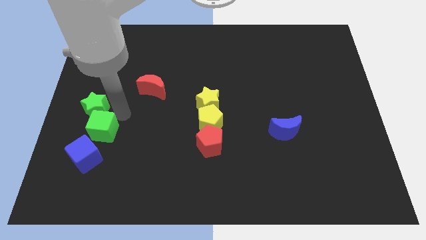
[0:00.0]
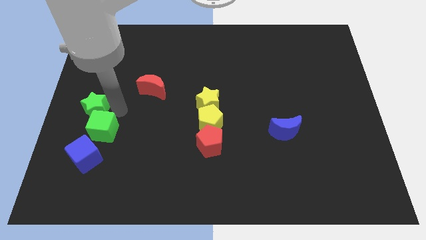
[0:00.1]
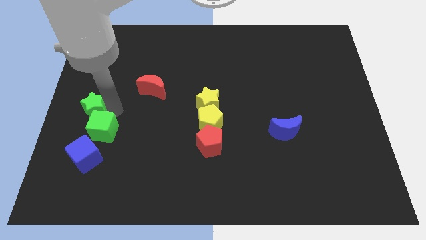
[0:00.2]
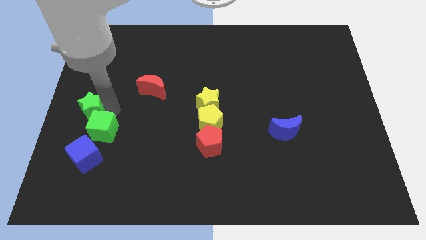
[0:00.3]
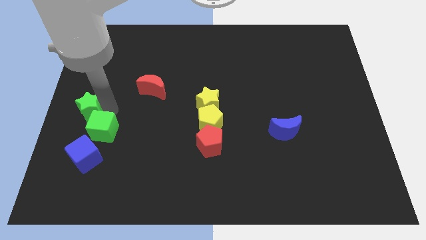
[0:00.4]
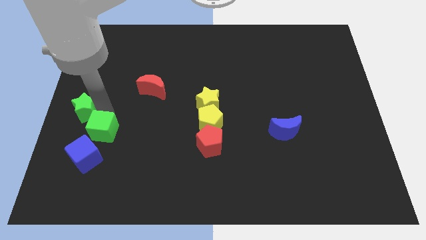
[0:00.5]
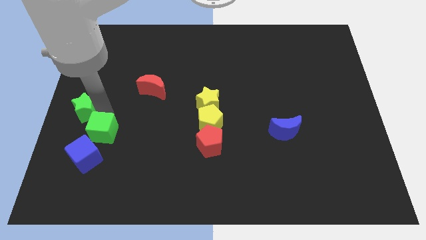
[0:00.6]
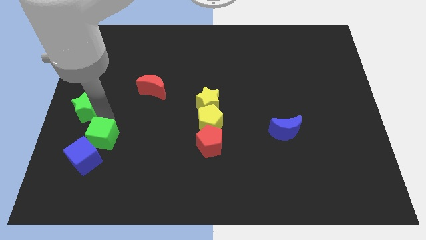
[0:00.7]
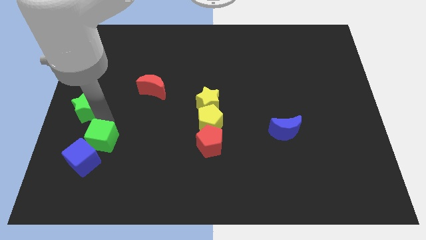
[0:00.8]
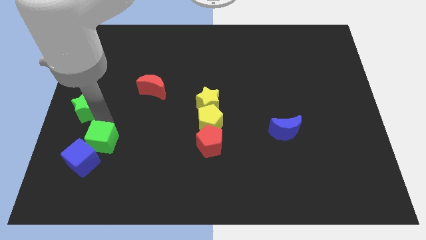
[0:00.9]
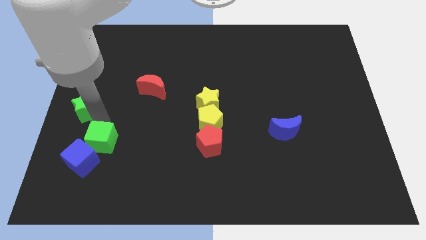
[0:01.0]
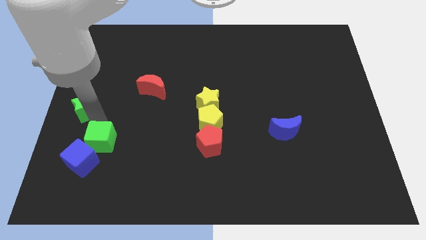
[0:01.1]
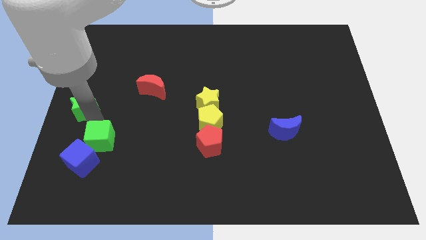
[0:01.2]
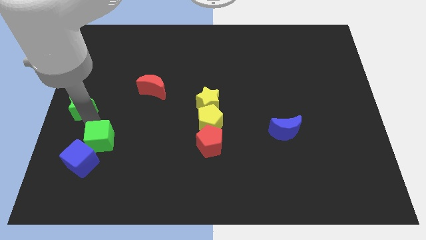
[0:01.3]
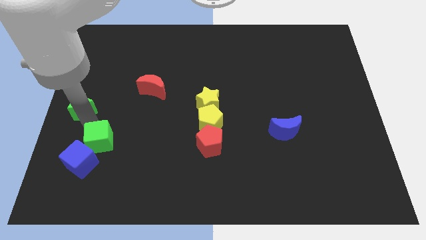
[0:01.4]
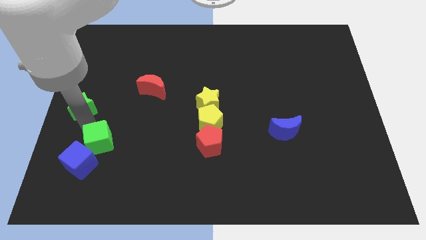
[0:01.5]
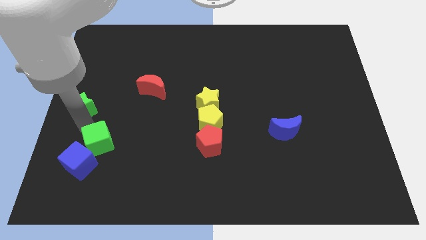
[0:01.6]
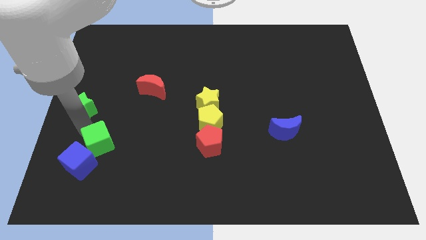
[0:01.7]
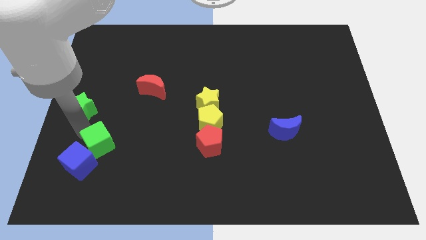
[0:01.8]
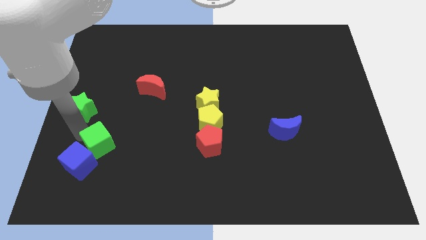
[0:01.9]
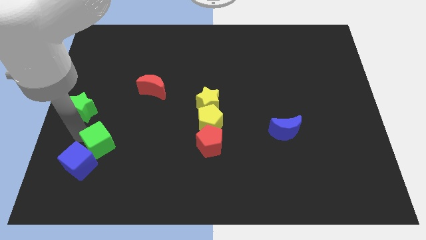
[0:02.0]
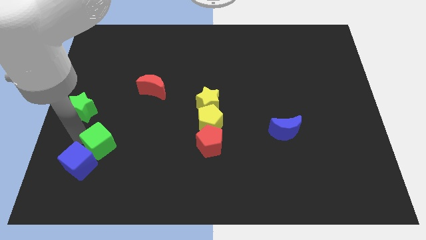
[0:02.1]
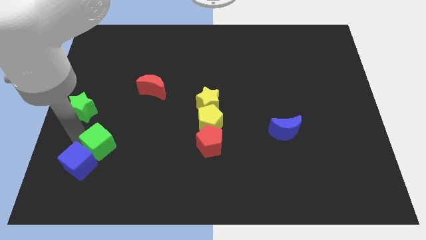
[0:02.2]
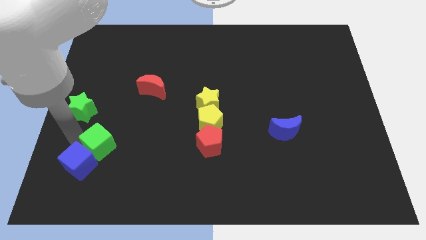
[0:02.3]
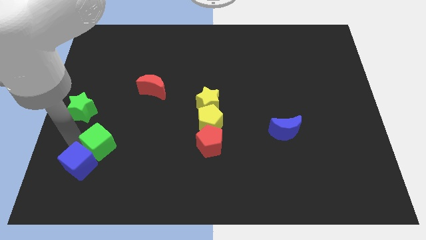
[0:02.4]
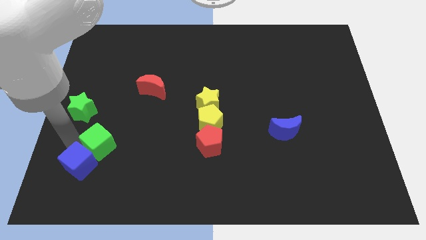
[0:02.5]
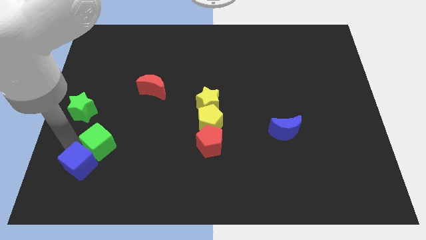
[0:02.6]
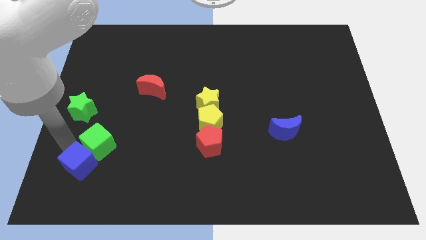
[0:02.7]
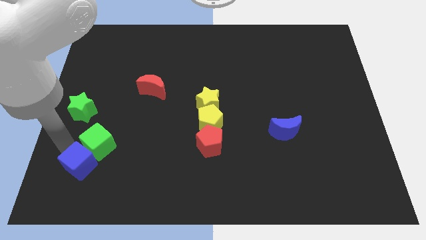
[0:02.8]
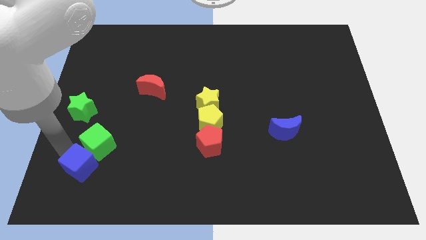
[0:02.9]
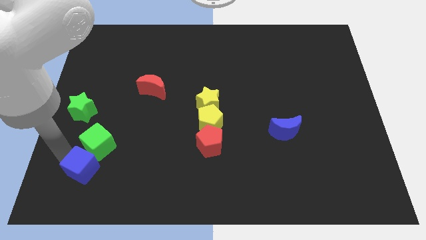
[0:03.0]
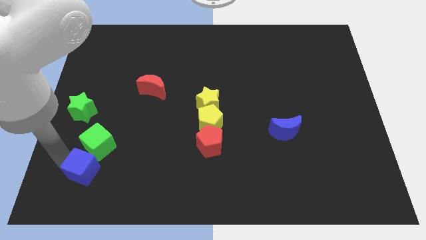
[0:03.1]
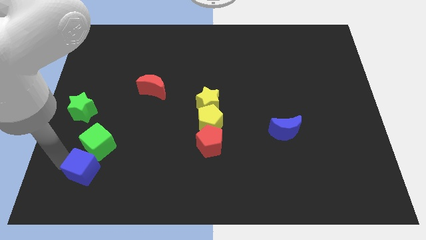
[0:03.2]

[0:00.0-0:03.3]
separate the green blocks

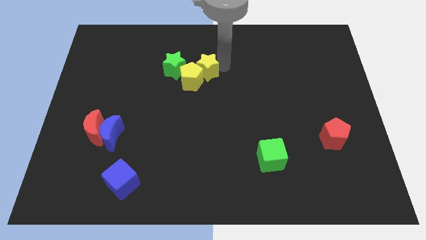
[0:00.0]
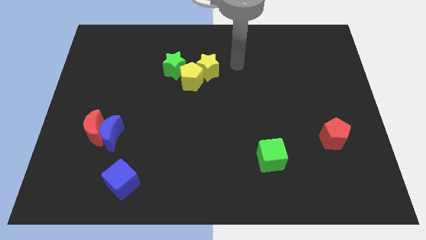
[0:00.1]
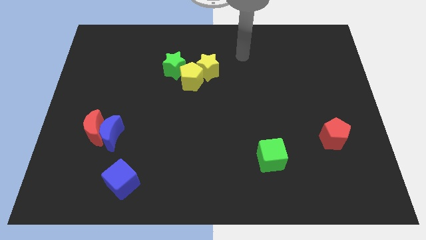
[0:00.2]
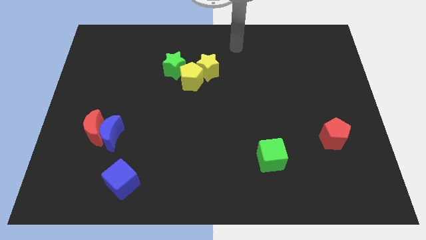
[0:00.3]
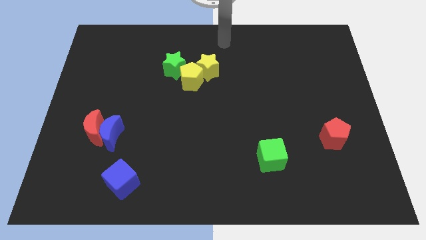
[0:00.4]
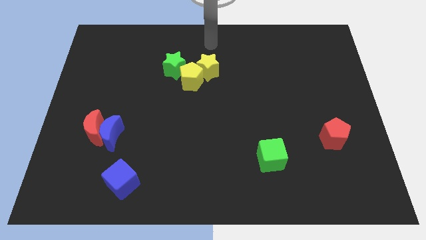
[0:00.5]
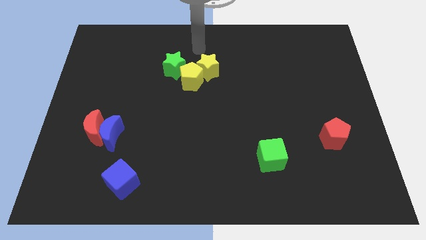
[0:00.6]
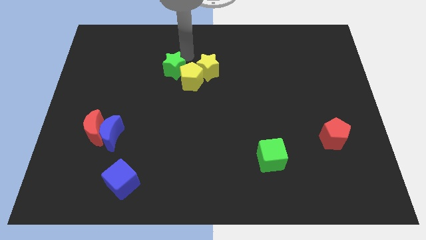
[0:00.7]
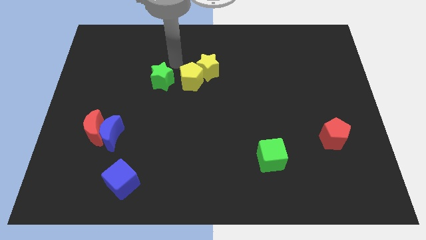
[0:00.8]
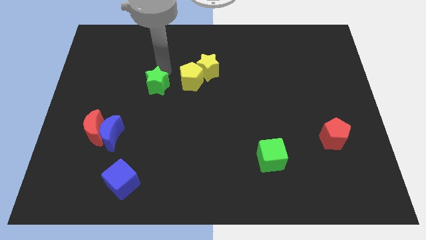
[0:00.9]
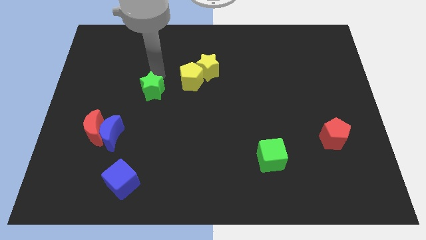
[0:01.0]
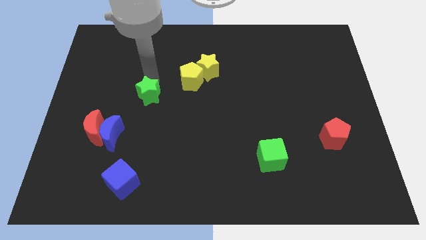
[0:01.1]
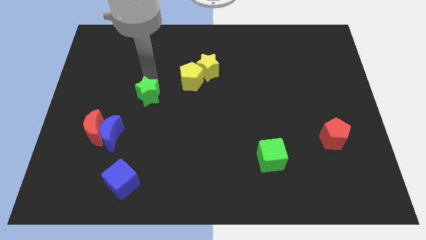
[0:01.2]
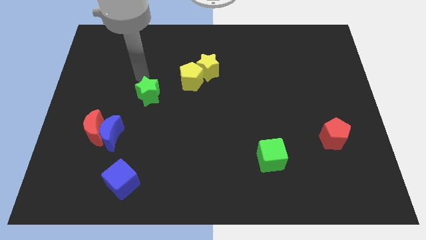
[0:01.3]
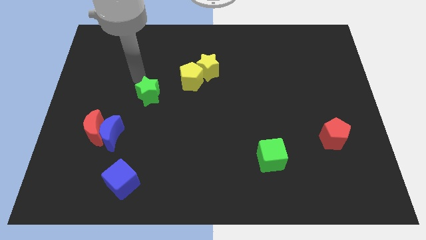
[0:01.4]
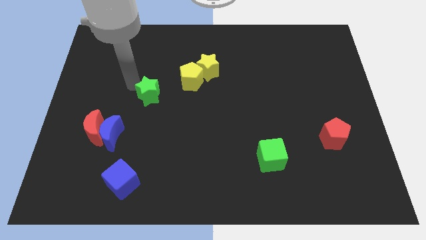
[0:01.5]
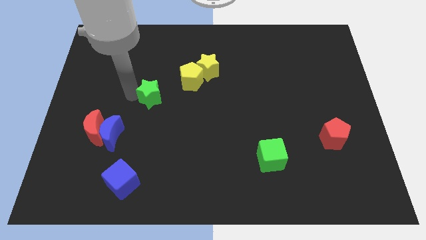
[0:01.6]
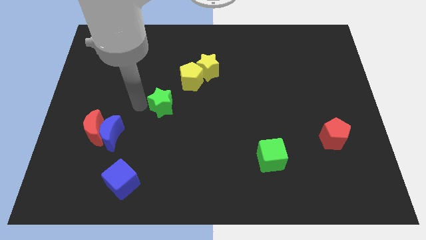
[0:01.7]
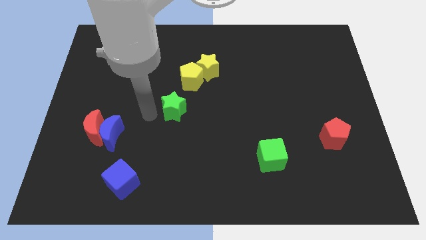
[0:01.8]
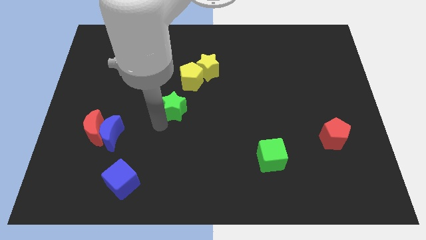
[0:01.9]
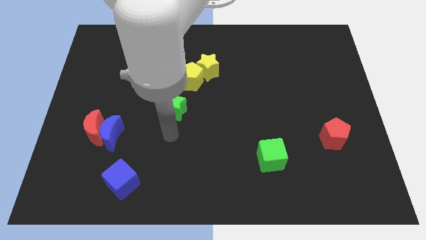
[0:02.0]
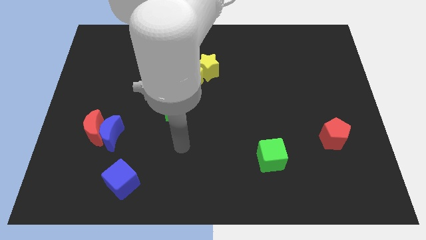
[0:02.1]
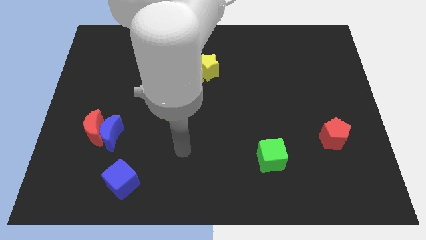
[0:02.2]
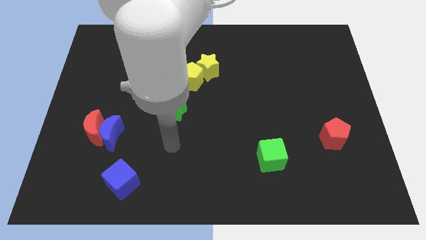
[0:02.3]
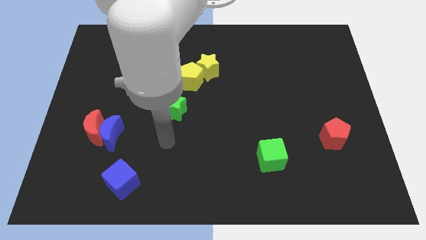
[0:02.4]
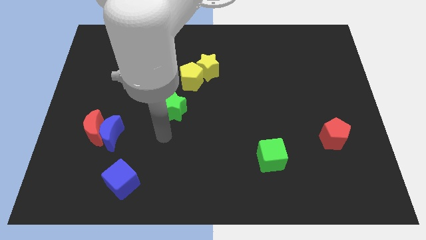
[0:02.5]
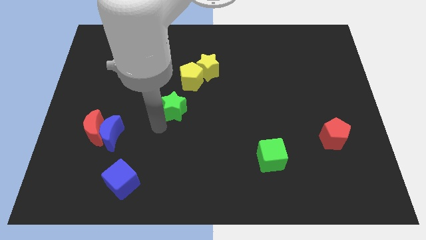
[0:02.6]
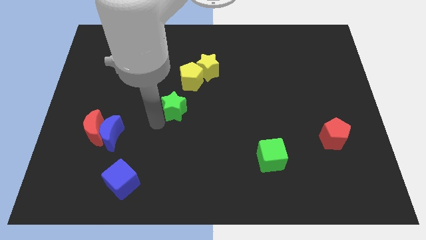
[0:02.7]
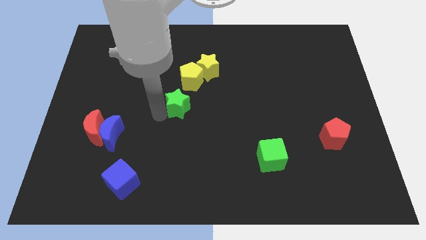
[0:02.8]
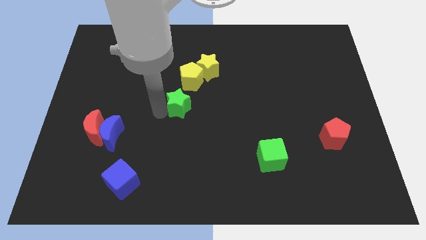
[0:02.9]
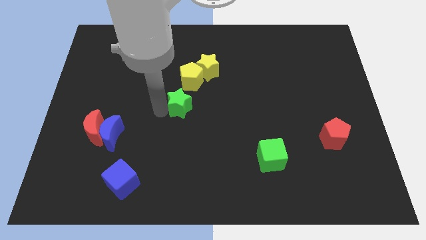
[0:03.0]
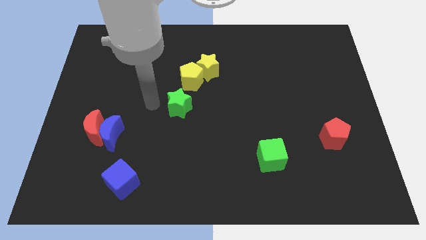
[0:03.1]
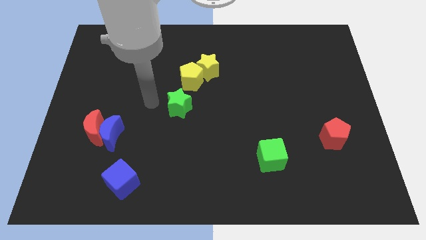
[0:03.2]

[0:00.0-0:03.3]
push the green star to the bottom side of the yellow pentagon

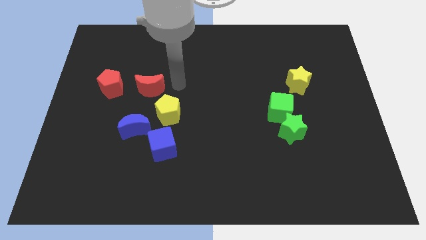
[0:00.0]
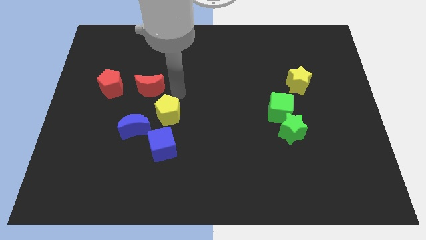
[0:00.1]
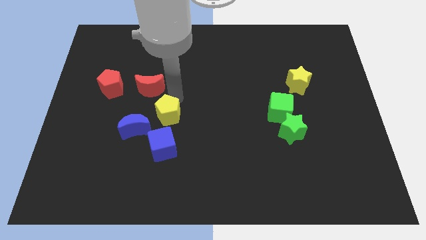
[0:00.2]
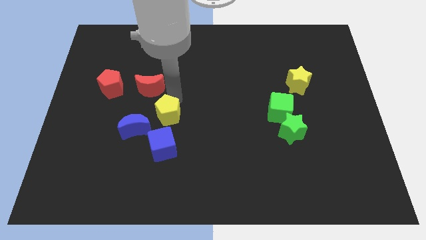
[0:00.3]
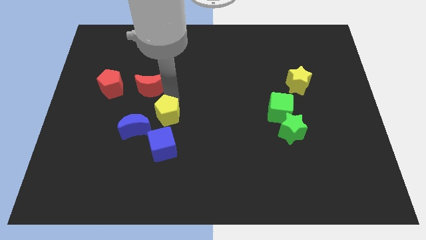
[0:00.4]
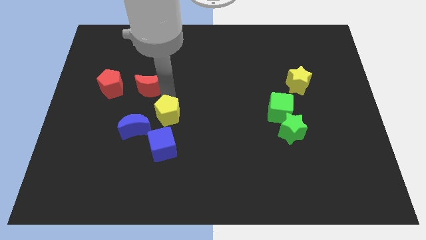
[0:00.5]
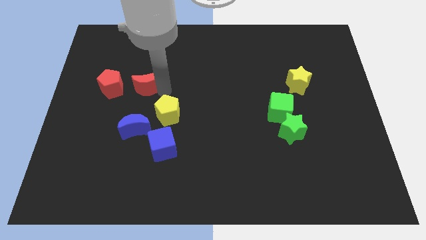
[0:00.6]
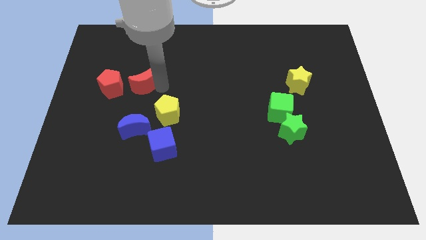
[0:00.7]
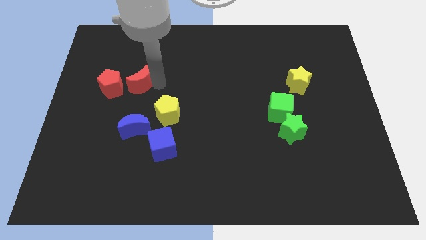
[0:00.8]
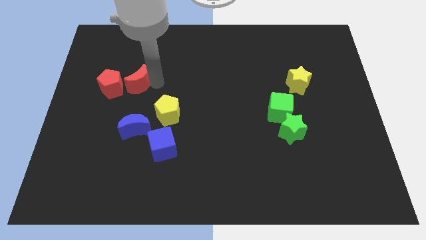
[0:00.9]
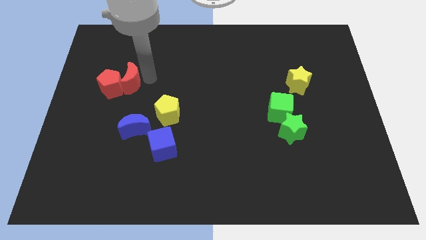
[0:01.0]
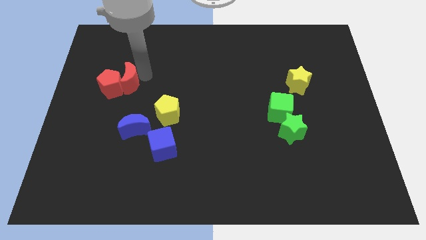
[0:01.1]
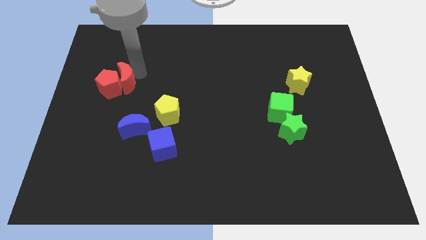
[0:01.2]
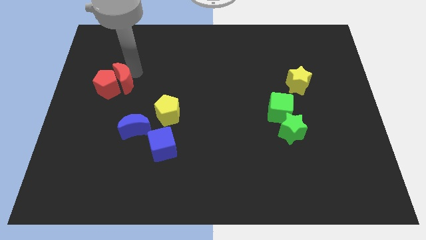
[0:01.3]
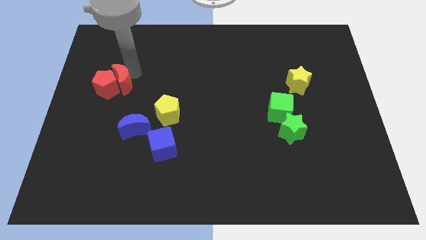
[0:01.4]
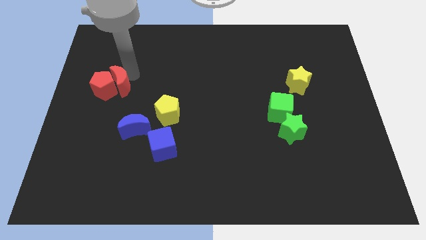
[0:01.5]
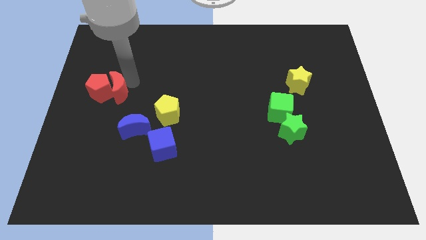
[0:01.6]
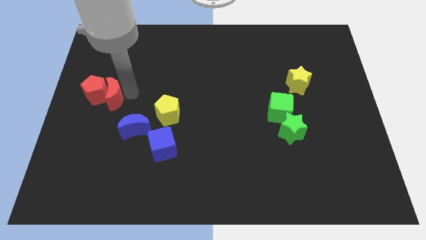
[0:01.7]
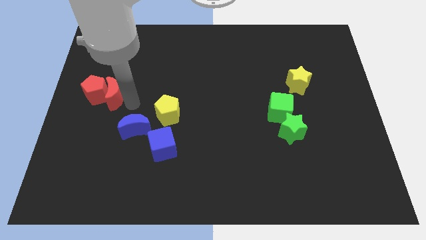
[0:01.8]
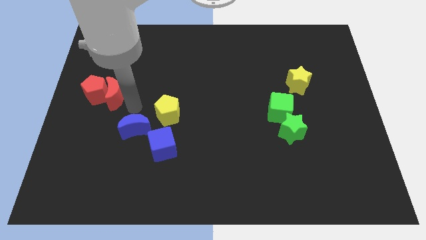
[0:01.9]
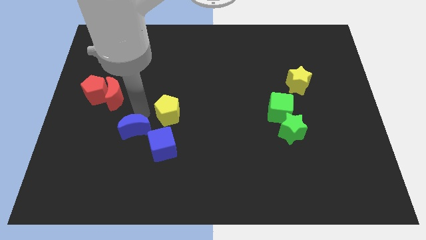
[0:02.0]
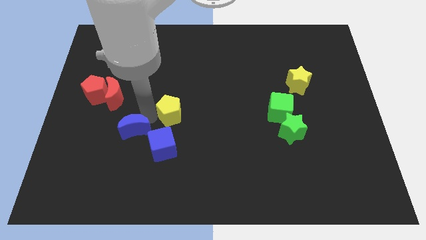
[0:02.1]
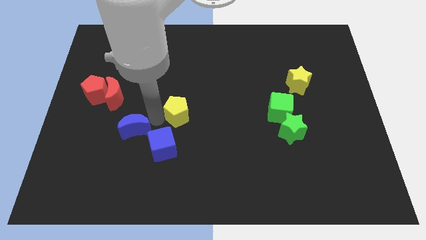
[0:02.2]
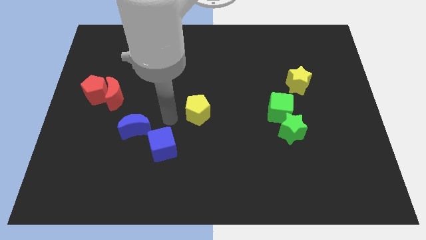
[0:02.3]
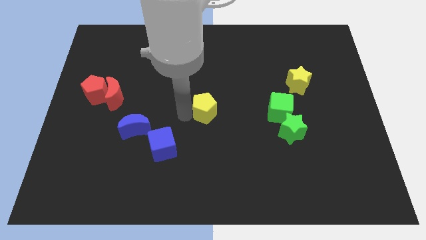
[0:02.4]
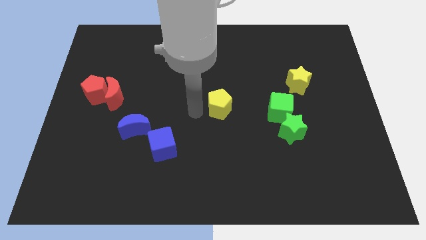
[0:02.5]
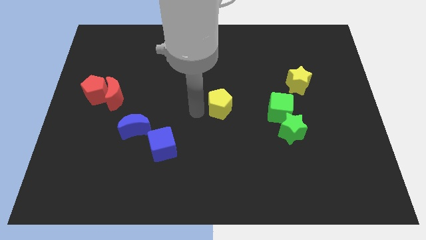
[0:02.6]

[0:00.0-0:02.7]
push yellow pentagon slightly to the centre of the board
